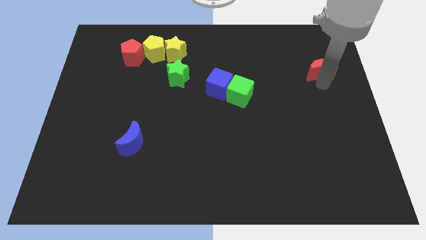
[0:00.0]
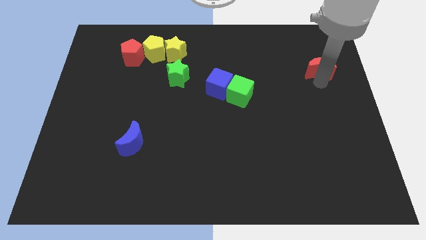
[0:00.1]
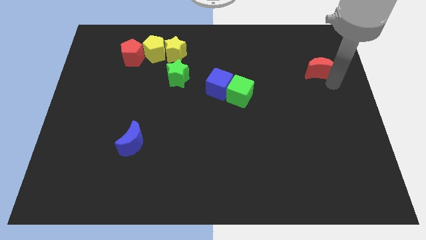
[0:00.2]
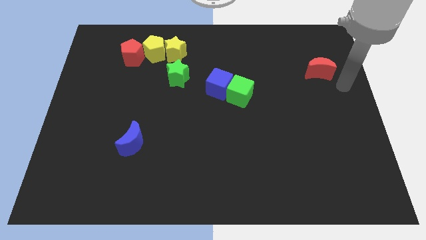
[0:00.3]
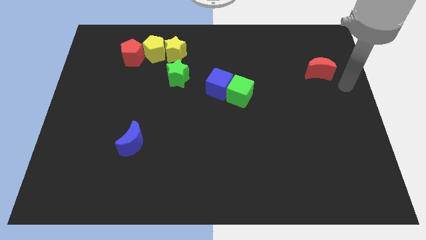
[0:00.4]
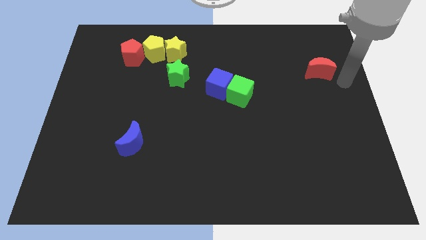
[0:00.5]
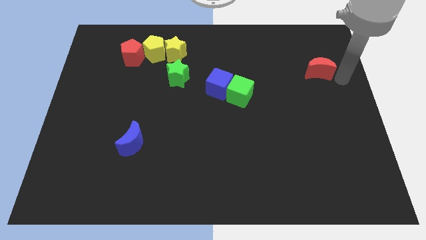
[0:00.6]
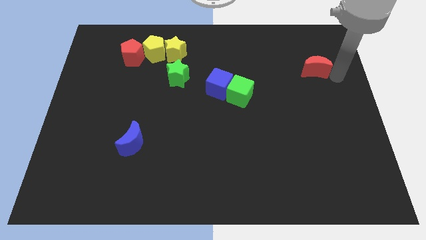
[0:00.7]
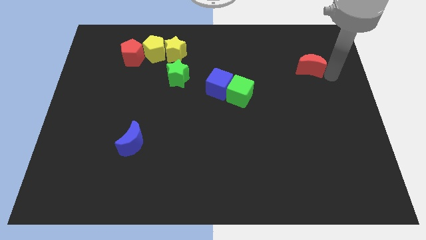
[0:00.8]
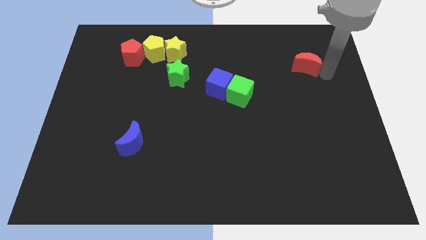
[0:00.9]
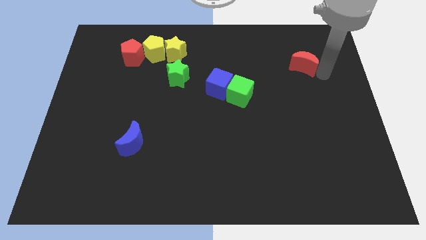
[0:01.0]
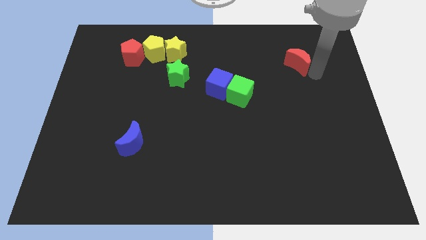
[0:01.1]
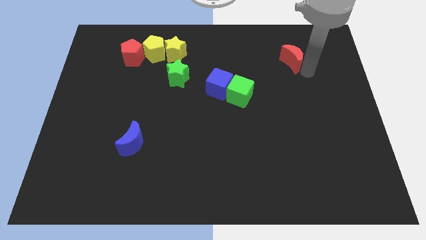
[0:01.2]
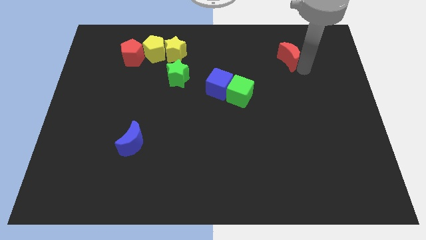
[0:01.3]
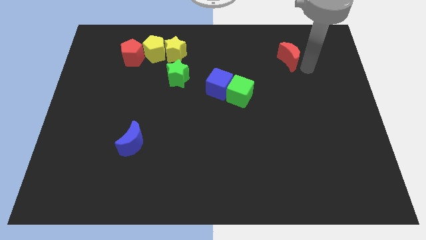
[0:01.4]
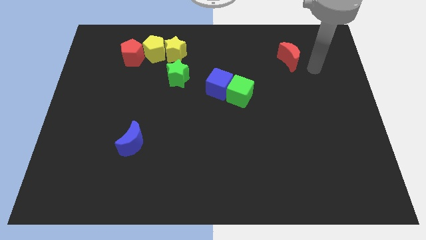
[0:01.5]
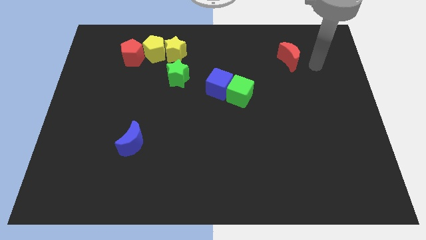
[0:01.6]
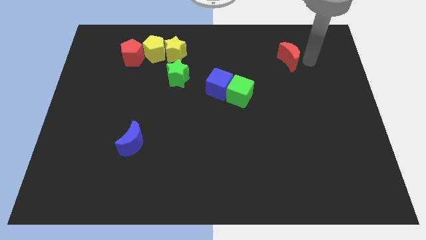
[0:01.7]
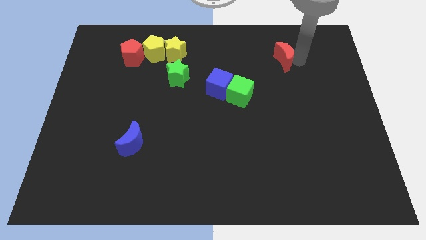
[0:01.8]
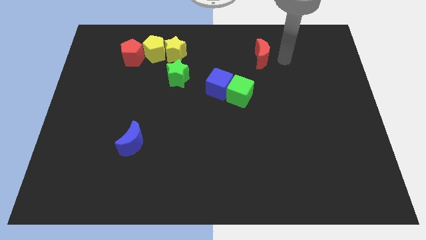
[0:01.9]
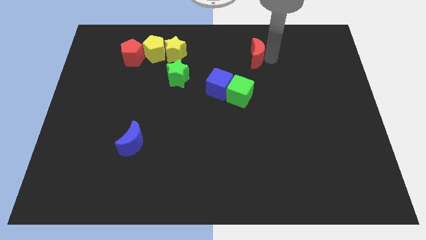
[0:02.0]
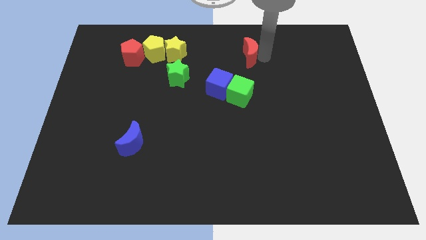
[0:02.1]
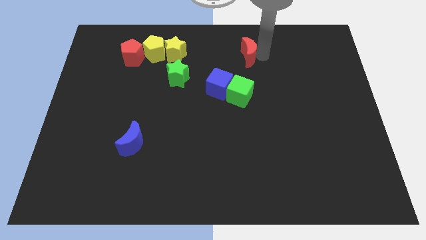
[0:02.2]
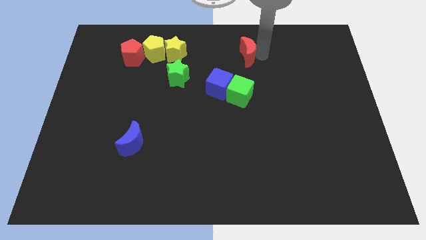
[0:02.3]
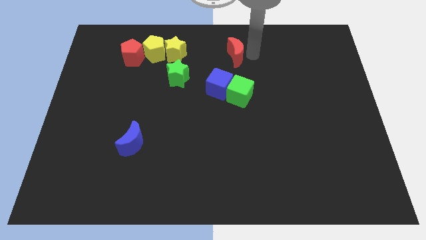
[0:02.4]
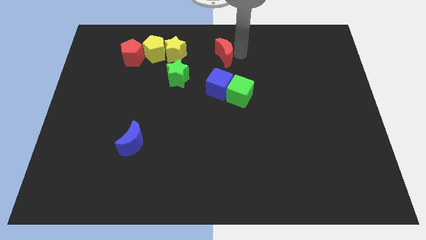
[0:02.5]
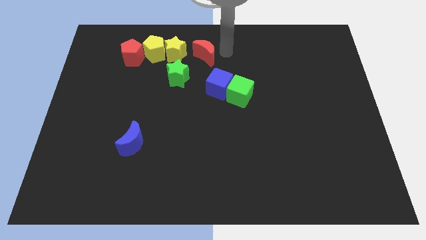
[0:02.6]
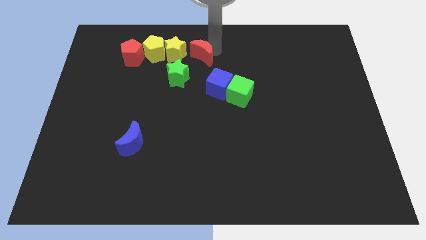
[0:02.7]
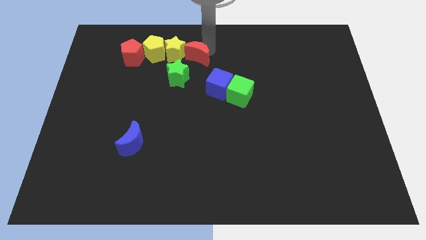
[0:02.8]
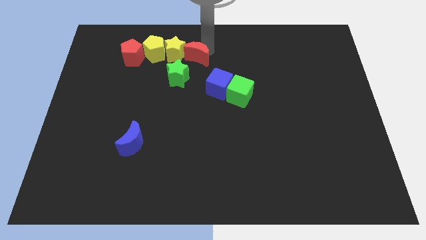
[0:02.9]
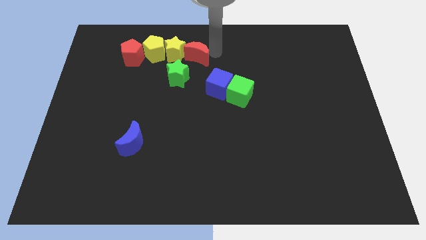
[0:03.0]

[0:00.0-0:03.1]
place the red crescent to the right of yellow star

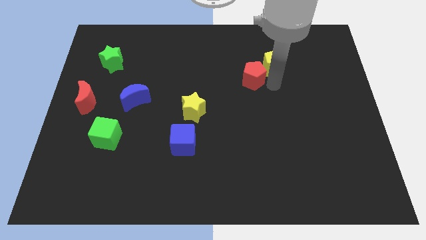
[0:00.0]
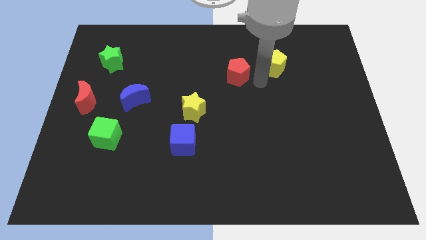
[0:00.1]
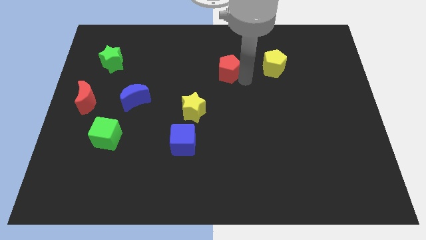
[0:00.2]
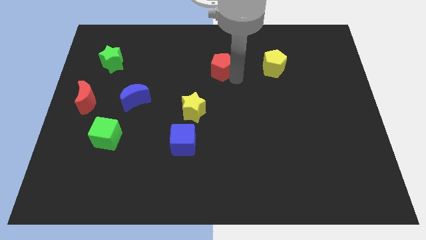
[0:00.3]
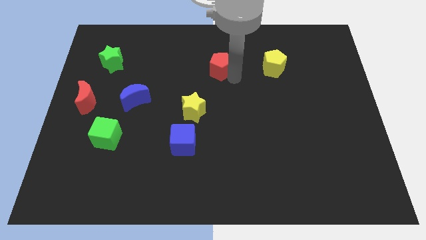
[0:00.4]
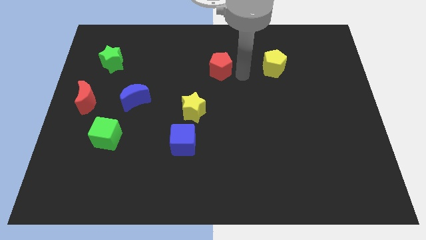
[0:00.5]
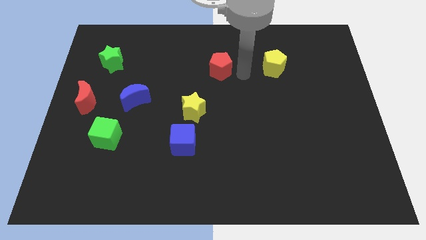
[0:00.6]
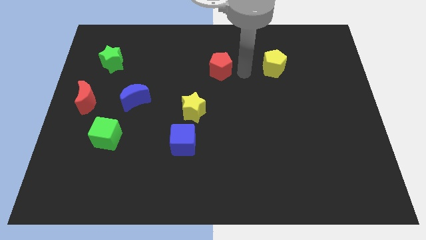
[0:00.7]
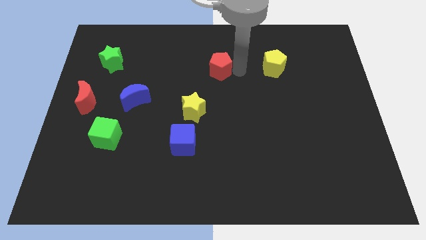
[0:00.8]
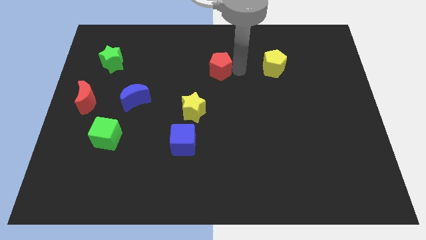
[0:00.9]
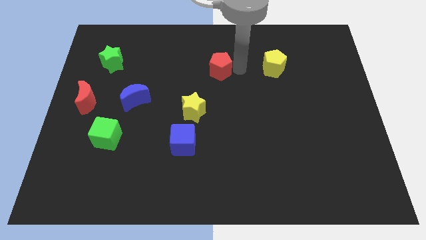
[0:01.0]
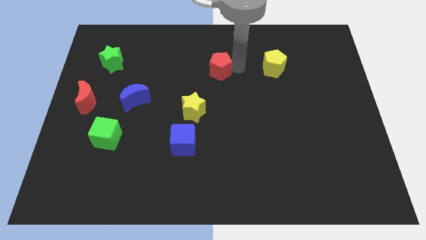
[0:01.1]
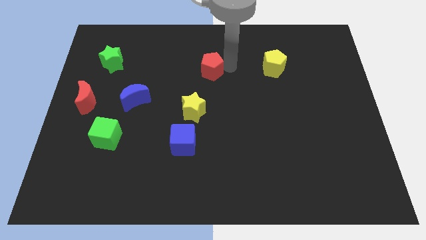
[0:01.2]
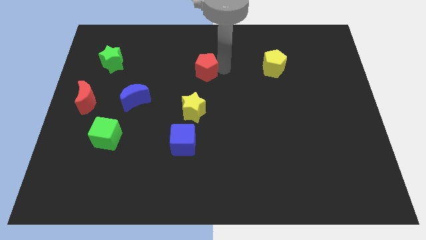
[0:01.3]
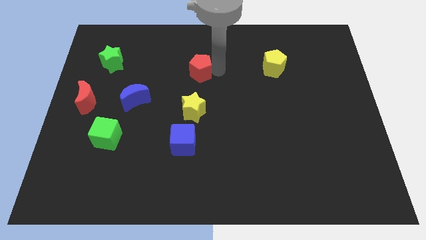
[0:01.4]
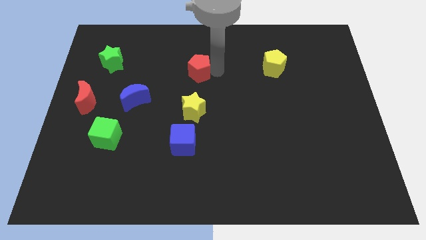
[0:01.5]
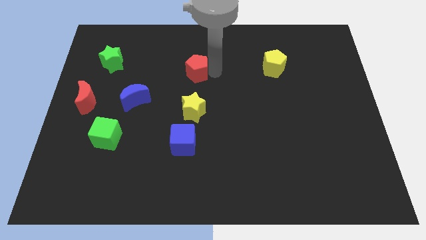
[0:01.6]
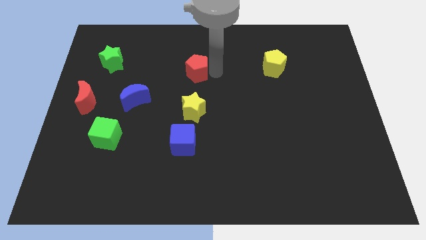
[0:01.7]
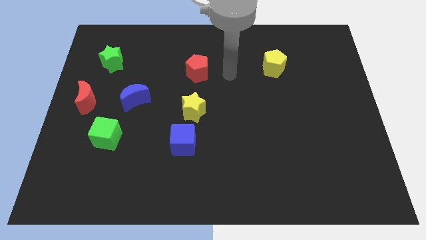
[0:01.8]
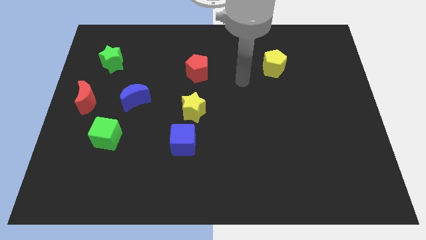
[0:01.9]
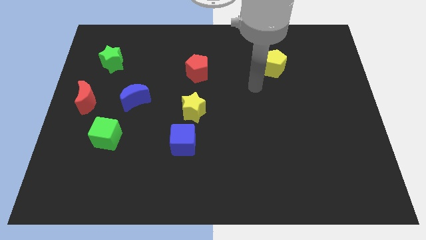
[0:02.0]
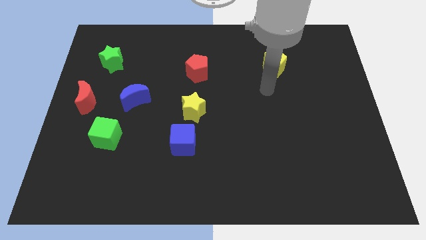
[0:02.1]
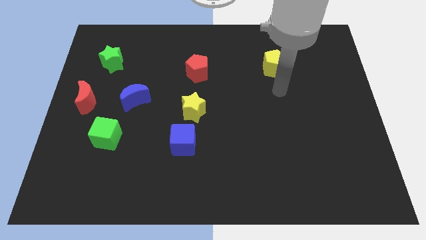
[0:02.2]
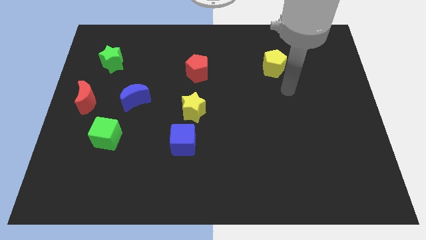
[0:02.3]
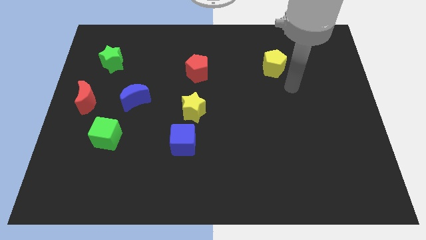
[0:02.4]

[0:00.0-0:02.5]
place the red pentagon above the yellow star

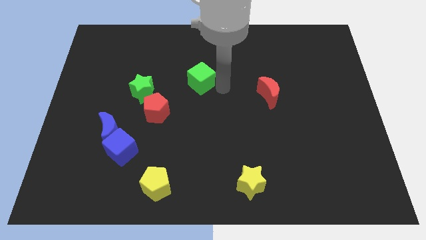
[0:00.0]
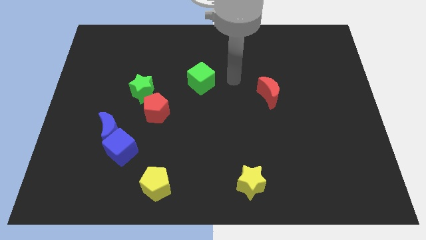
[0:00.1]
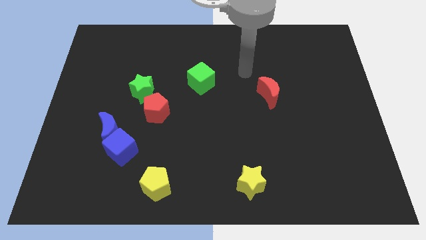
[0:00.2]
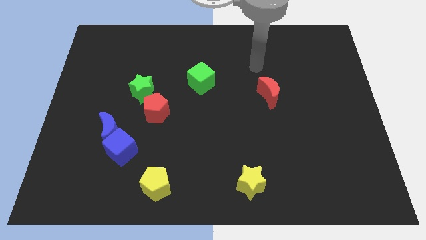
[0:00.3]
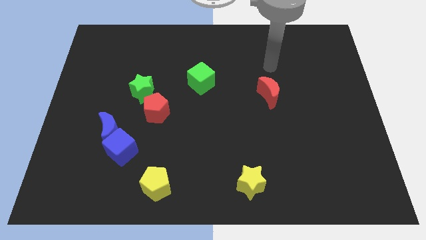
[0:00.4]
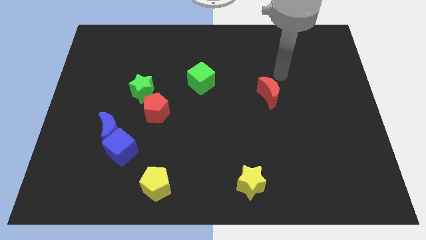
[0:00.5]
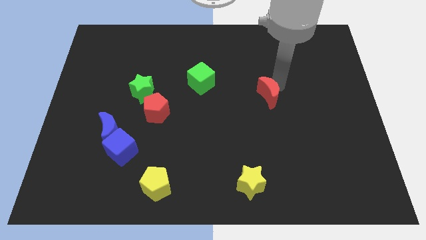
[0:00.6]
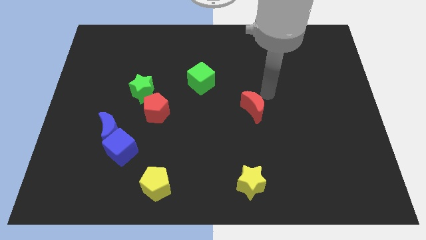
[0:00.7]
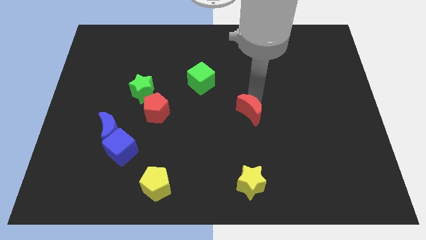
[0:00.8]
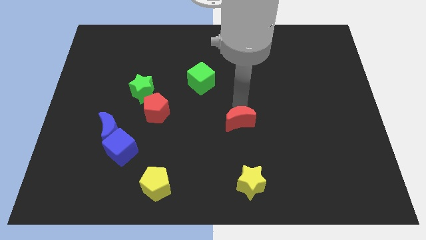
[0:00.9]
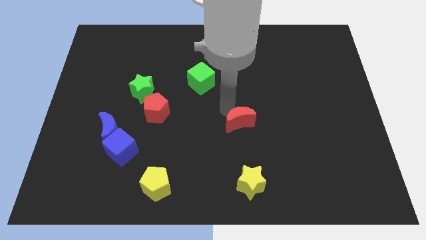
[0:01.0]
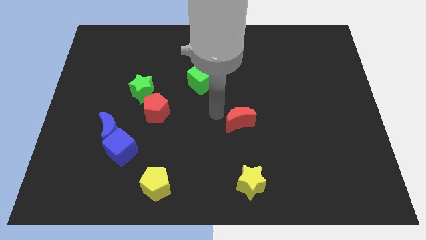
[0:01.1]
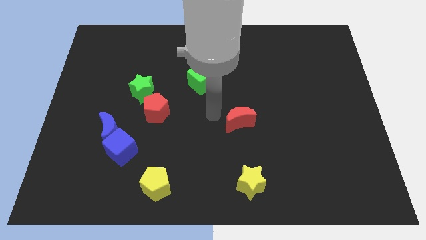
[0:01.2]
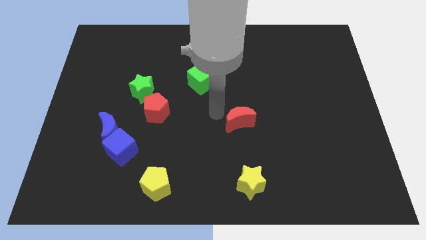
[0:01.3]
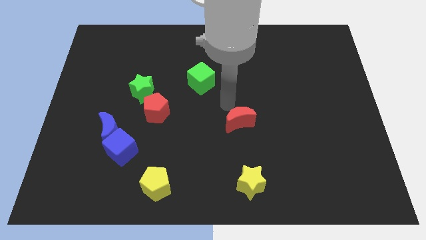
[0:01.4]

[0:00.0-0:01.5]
slide the red crescent vertically above the yellow star

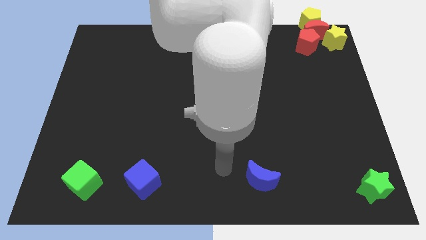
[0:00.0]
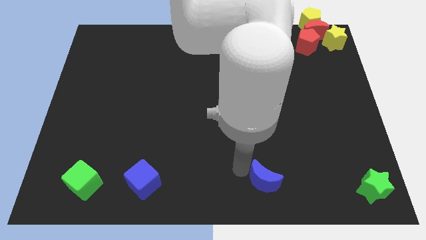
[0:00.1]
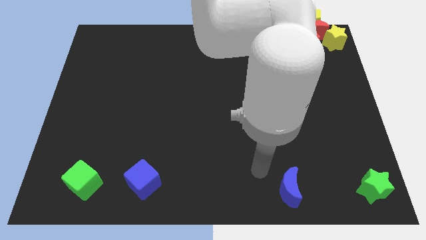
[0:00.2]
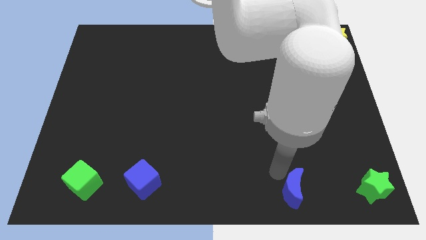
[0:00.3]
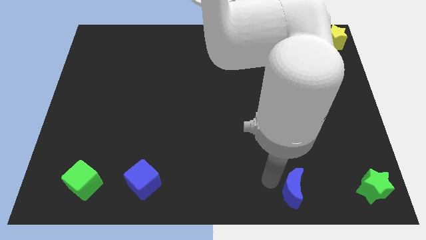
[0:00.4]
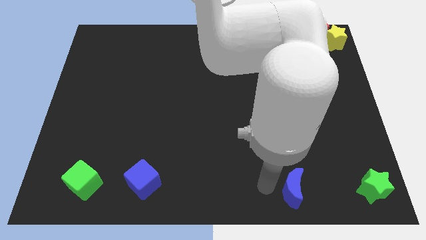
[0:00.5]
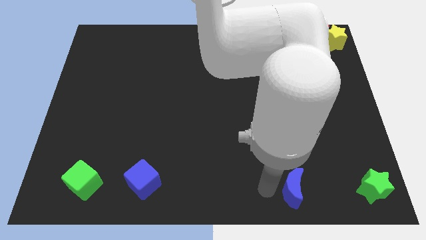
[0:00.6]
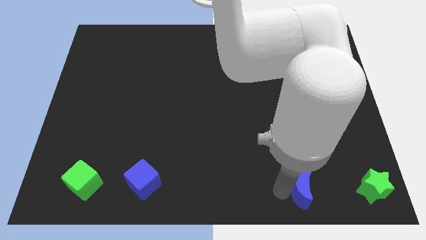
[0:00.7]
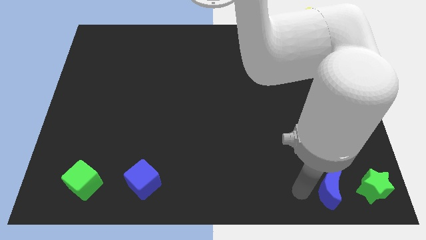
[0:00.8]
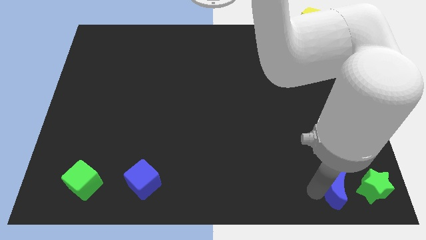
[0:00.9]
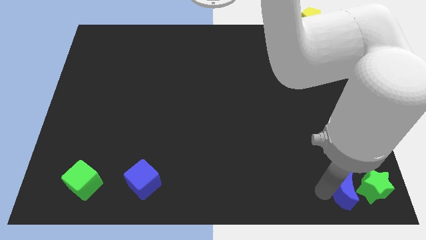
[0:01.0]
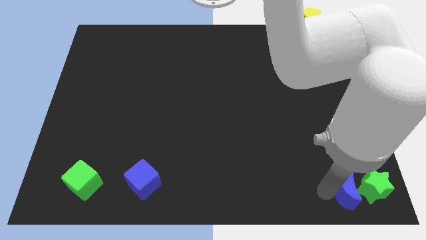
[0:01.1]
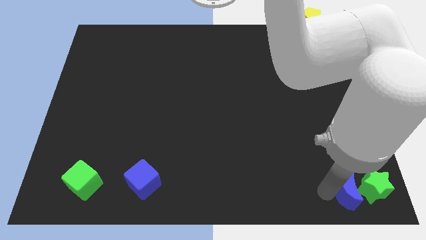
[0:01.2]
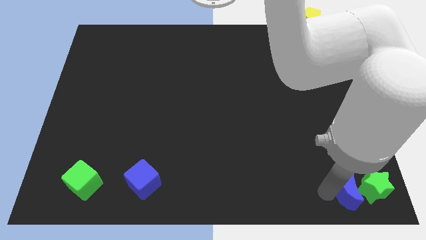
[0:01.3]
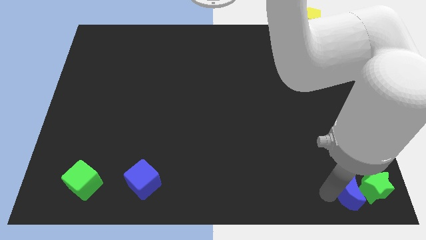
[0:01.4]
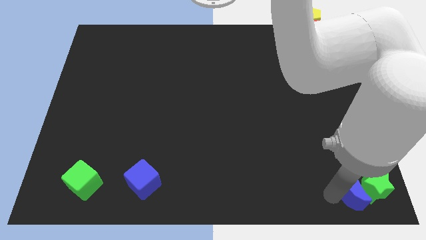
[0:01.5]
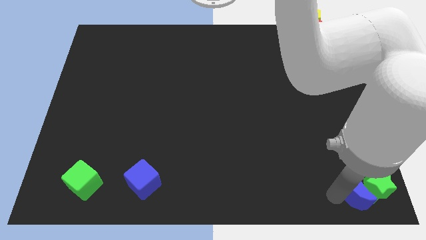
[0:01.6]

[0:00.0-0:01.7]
move the blue moon to left side of green star

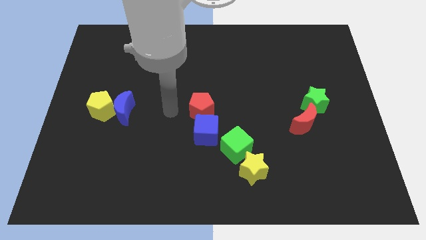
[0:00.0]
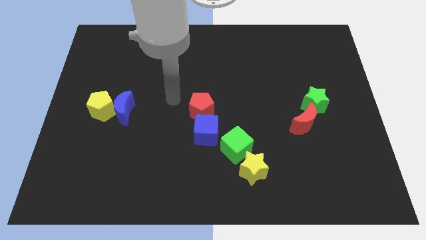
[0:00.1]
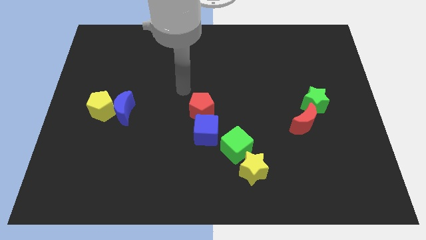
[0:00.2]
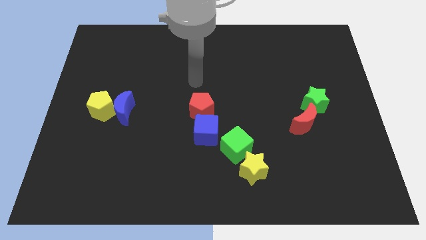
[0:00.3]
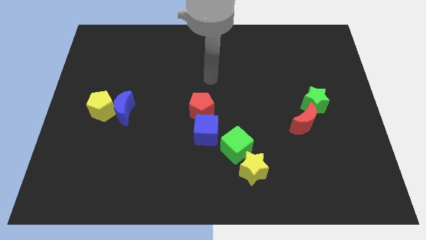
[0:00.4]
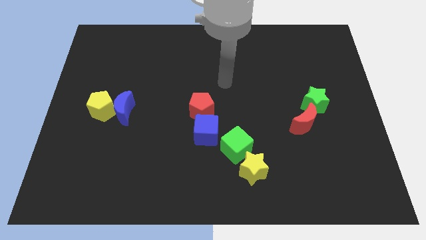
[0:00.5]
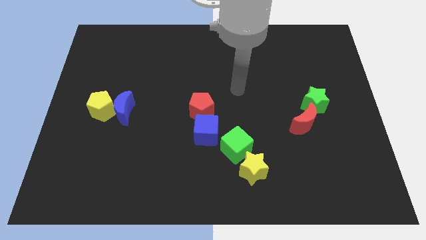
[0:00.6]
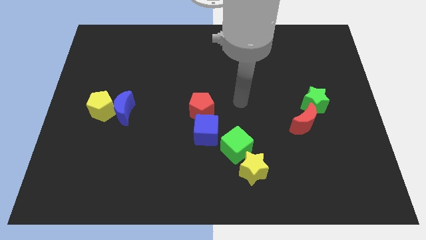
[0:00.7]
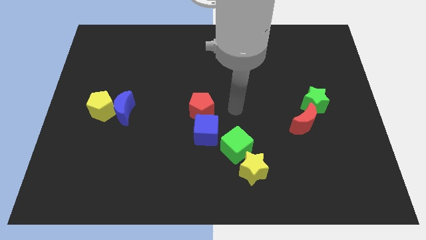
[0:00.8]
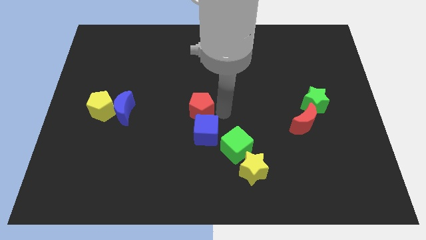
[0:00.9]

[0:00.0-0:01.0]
point your arm to the right side of red pentagon
